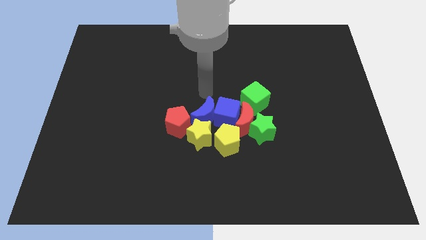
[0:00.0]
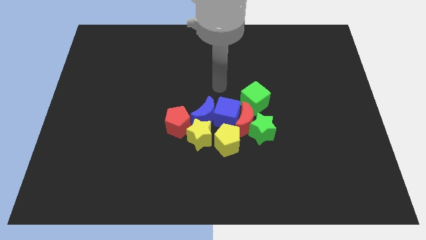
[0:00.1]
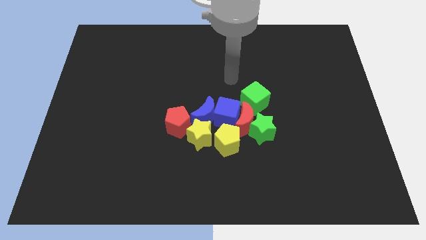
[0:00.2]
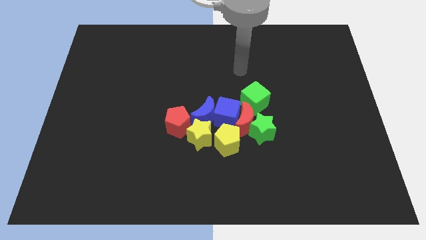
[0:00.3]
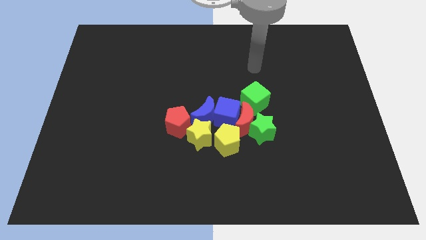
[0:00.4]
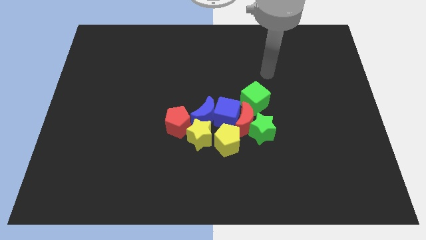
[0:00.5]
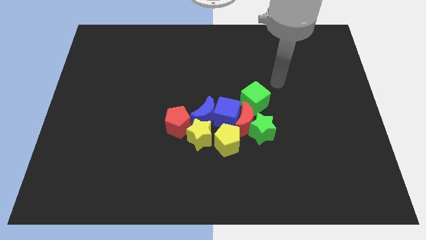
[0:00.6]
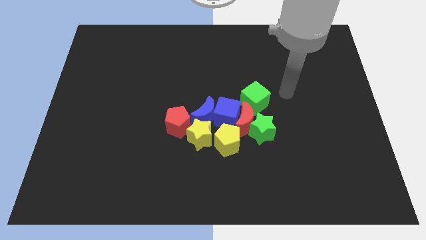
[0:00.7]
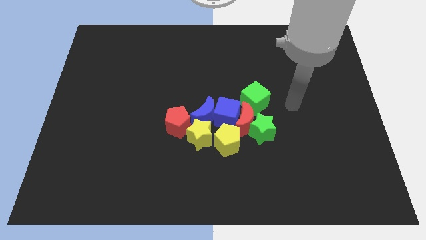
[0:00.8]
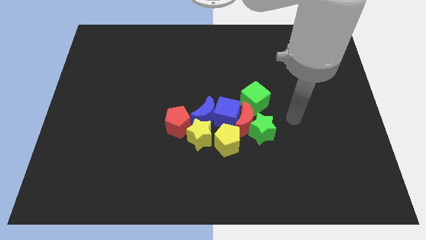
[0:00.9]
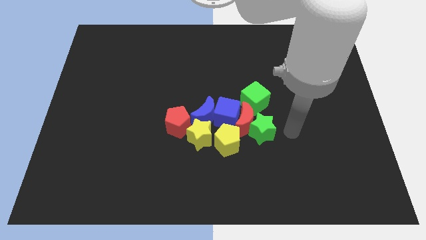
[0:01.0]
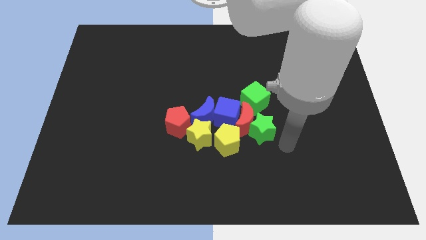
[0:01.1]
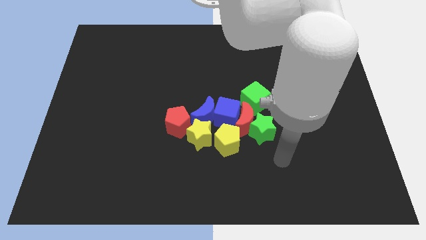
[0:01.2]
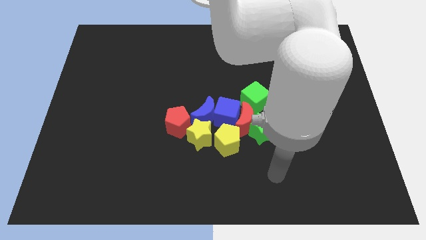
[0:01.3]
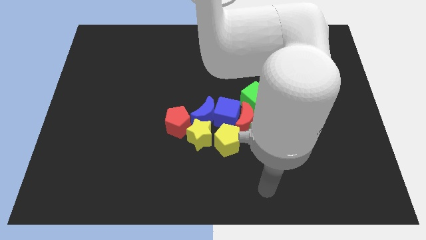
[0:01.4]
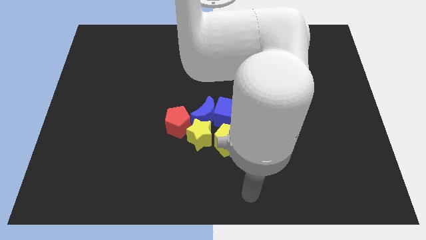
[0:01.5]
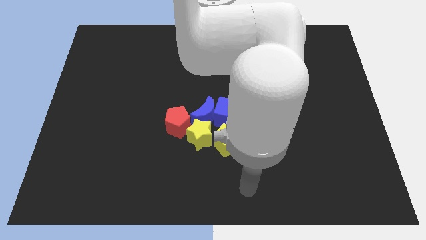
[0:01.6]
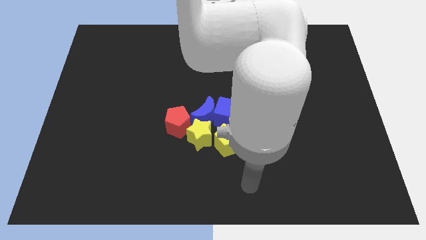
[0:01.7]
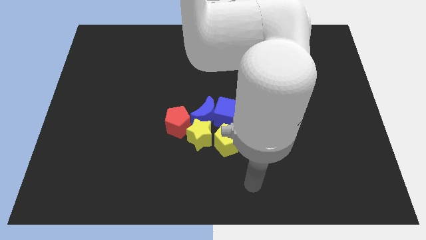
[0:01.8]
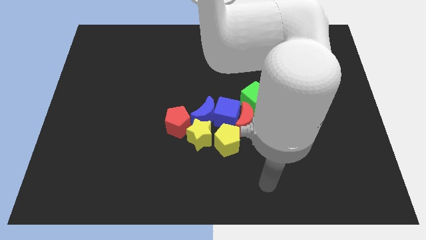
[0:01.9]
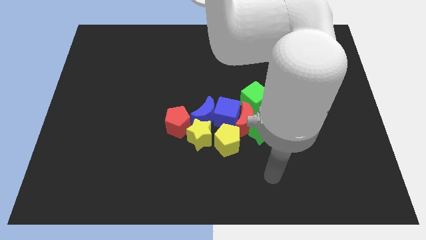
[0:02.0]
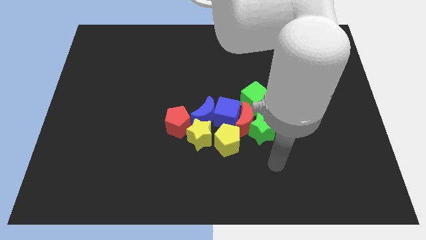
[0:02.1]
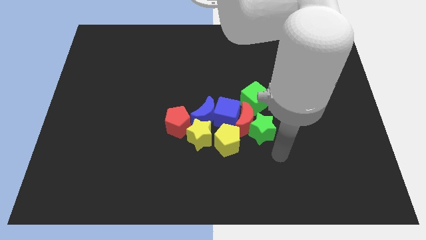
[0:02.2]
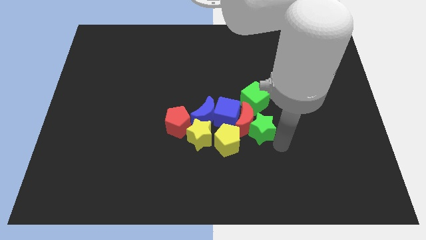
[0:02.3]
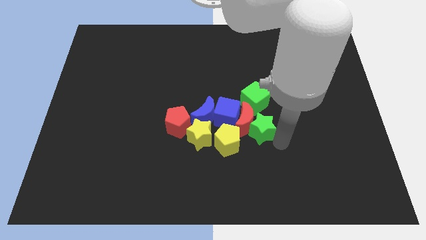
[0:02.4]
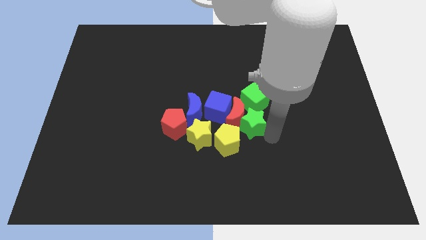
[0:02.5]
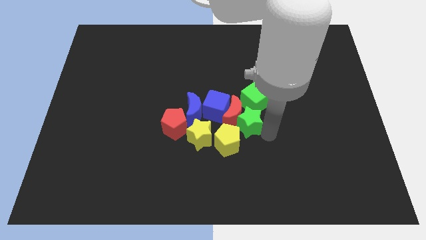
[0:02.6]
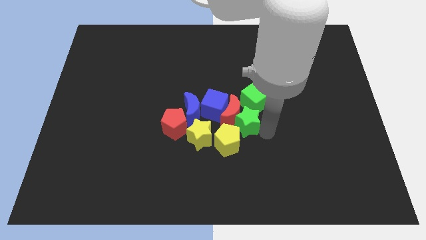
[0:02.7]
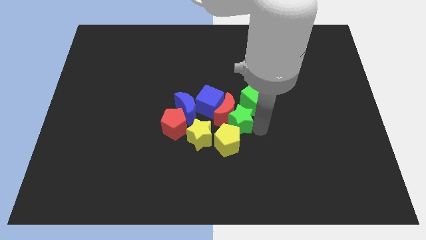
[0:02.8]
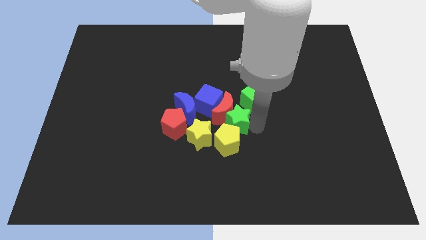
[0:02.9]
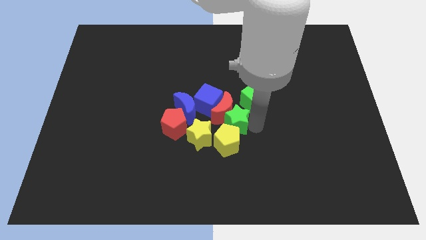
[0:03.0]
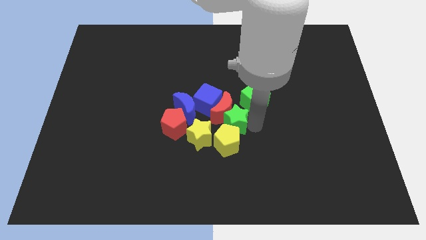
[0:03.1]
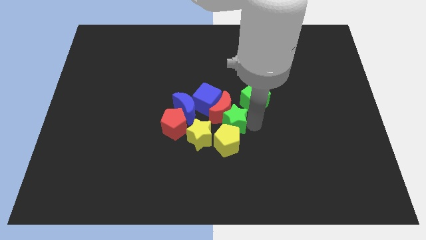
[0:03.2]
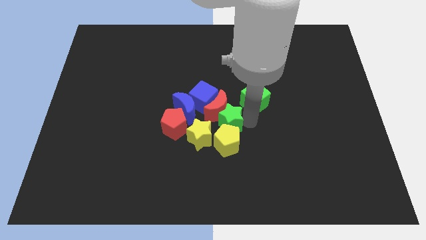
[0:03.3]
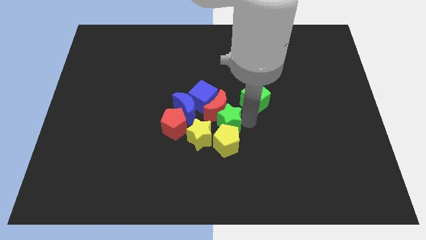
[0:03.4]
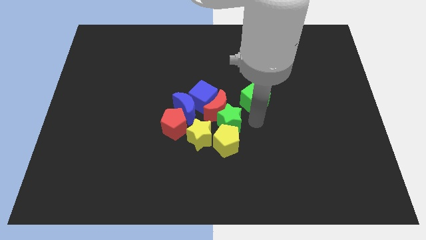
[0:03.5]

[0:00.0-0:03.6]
move the green star to the top of the yellow pentagon

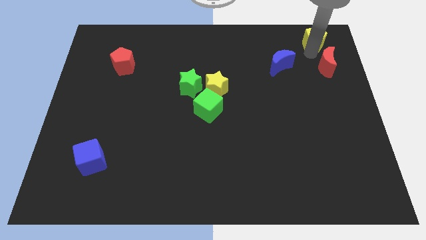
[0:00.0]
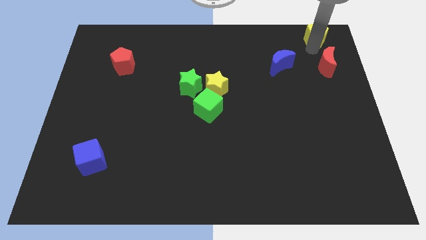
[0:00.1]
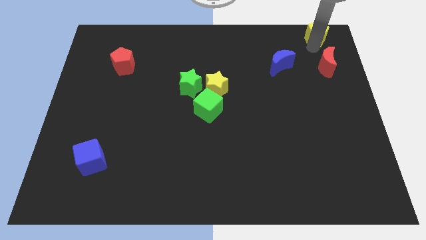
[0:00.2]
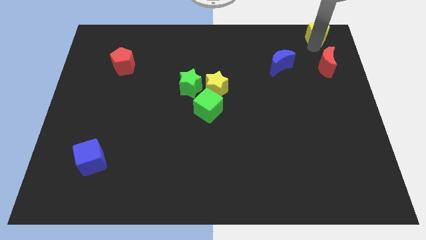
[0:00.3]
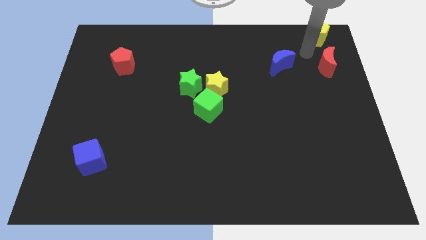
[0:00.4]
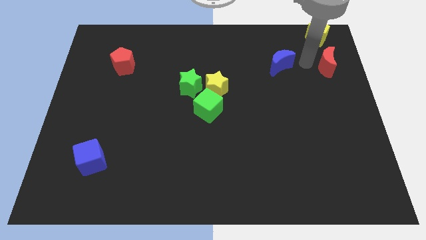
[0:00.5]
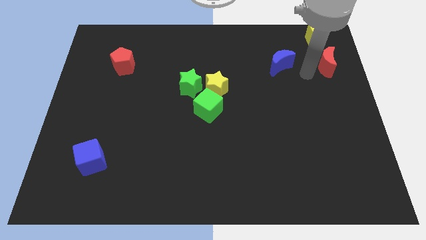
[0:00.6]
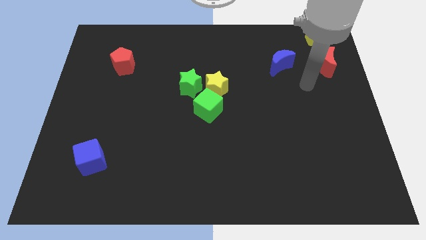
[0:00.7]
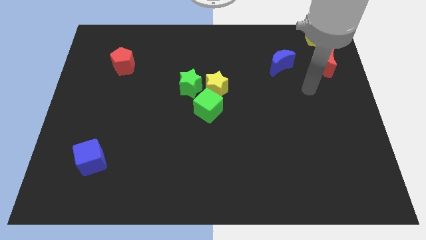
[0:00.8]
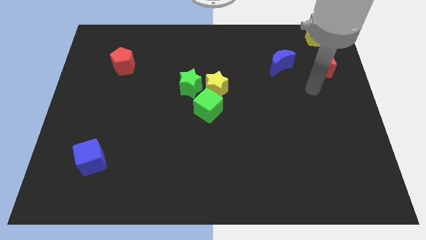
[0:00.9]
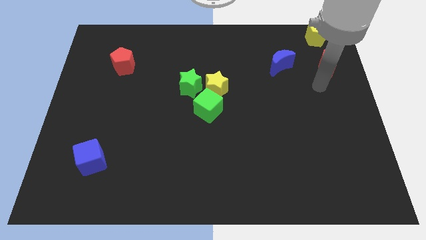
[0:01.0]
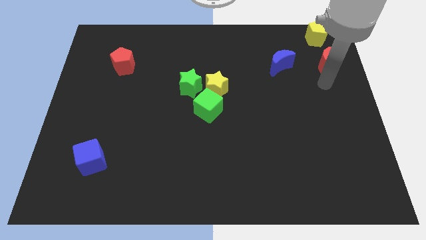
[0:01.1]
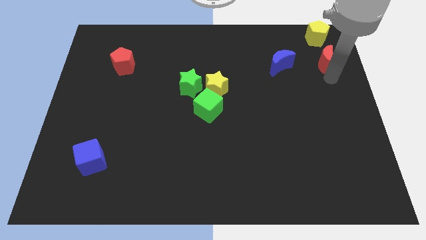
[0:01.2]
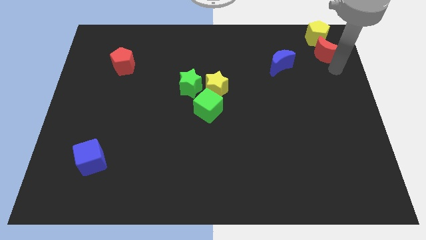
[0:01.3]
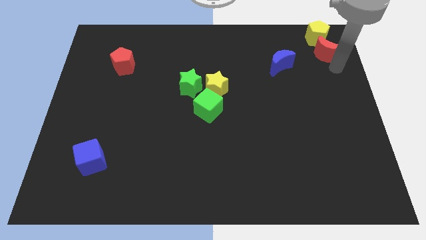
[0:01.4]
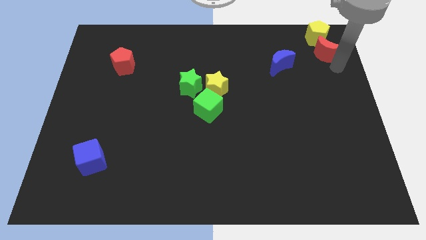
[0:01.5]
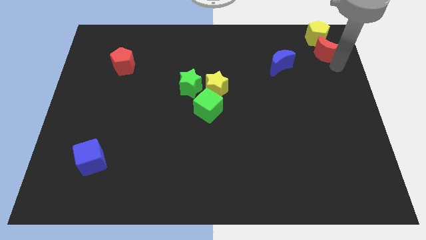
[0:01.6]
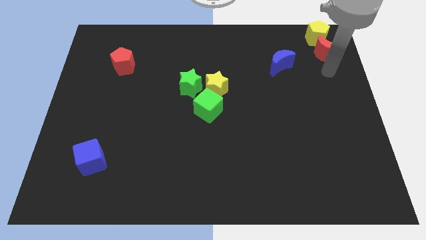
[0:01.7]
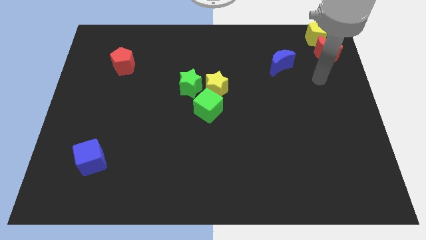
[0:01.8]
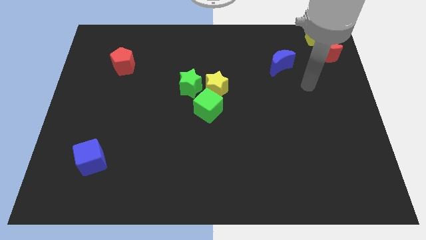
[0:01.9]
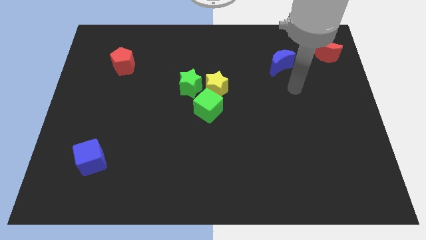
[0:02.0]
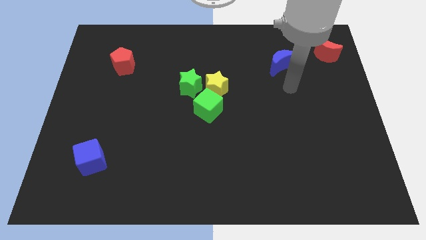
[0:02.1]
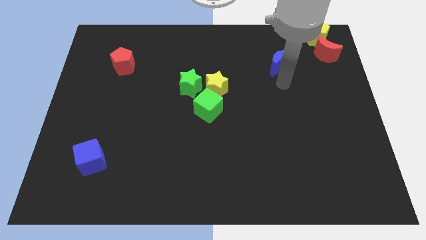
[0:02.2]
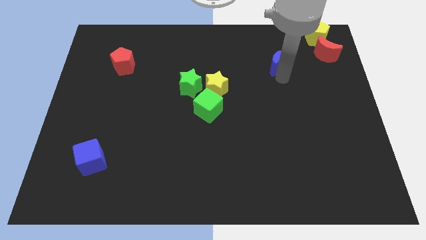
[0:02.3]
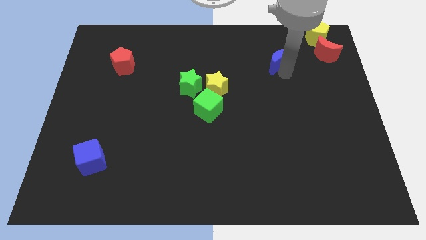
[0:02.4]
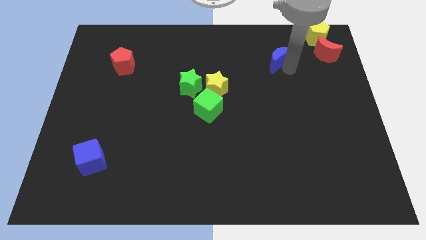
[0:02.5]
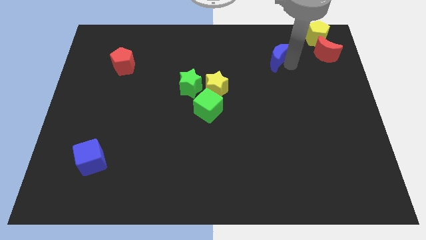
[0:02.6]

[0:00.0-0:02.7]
push the red moon down to the yellow pentagon

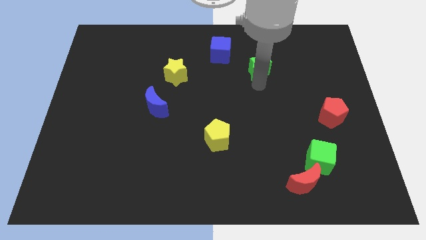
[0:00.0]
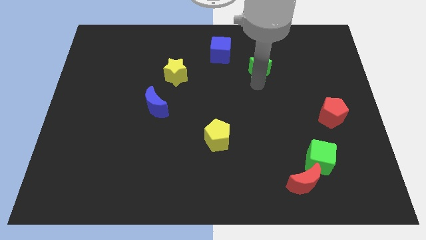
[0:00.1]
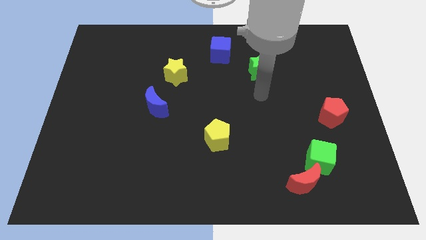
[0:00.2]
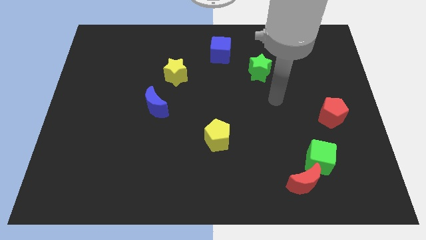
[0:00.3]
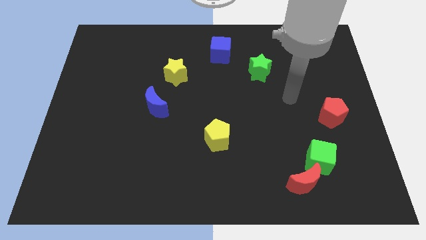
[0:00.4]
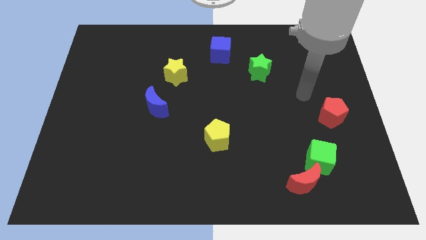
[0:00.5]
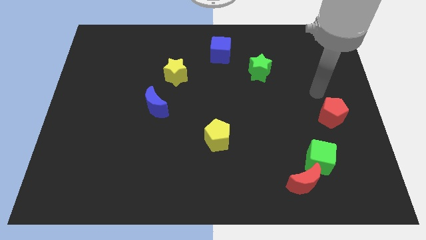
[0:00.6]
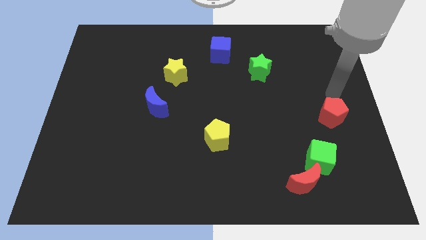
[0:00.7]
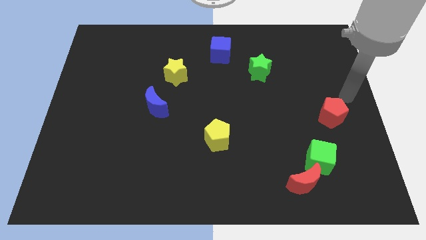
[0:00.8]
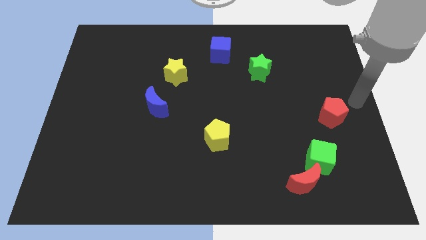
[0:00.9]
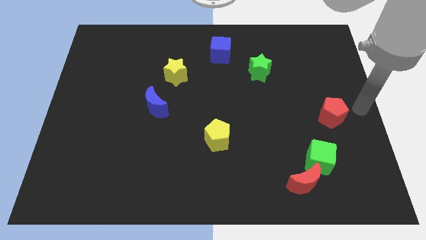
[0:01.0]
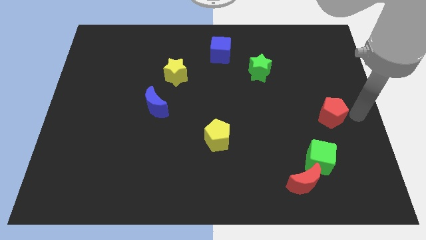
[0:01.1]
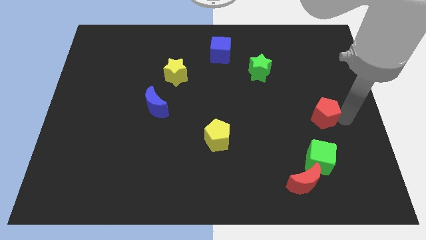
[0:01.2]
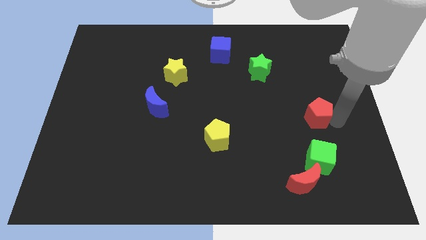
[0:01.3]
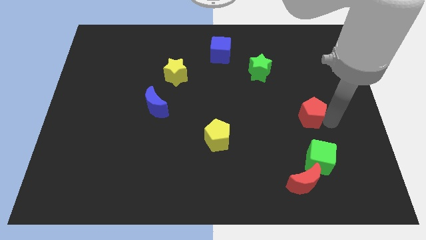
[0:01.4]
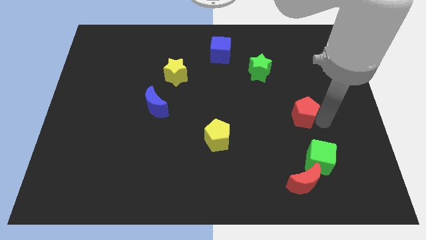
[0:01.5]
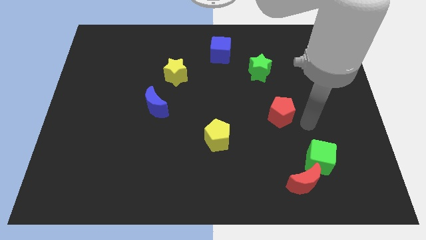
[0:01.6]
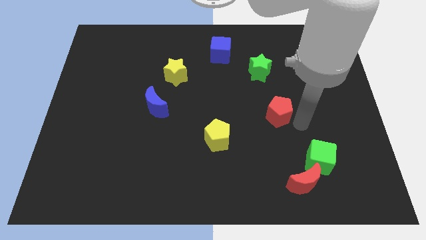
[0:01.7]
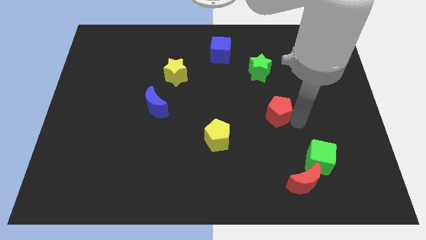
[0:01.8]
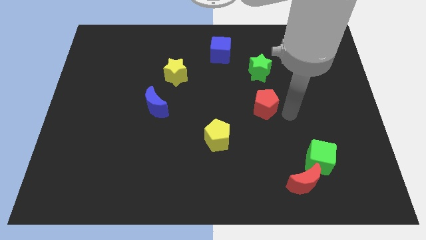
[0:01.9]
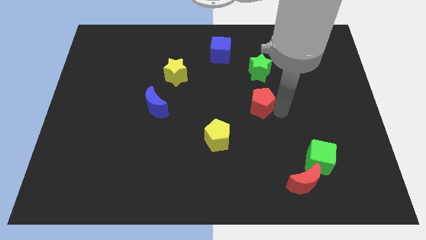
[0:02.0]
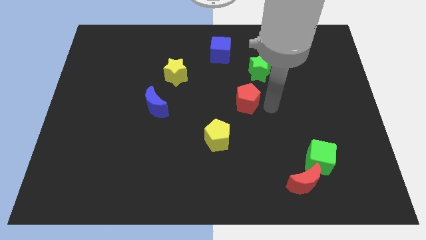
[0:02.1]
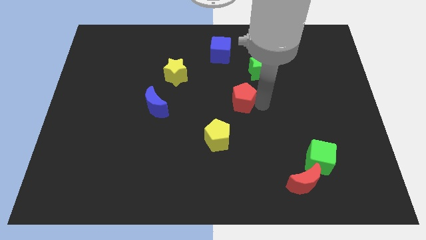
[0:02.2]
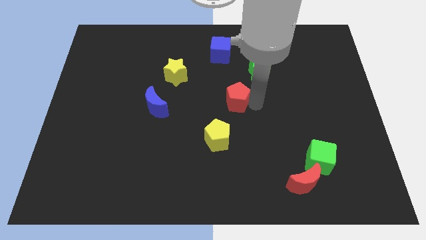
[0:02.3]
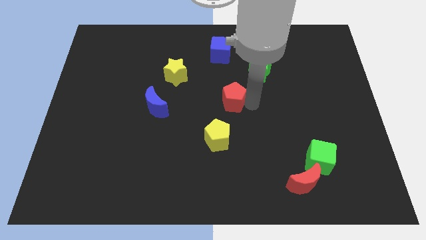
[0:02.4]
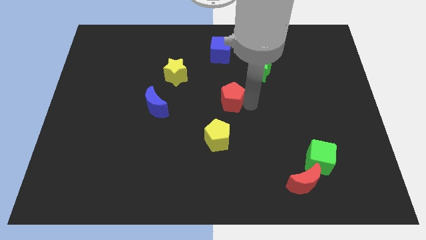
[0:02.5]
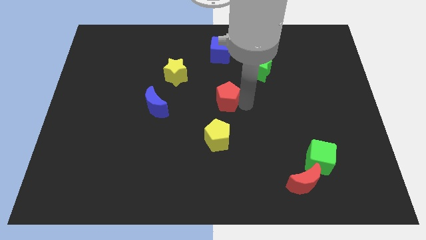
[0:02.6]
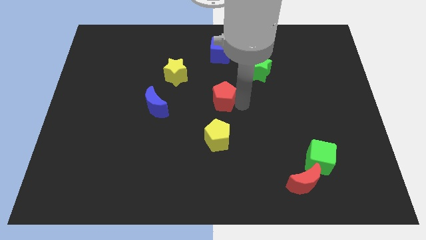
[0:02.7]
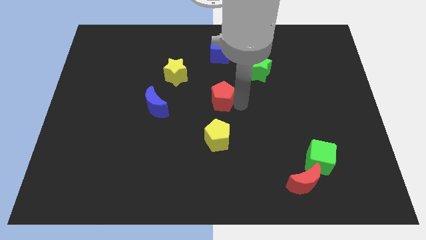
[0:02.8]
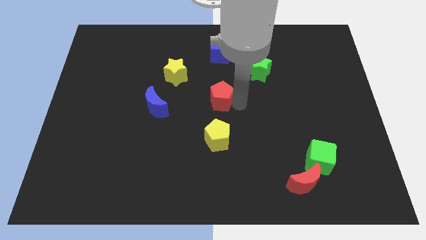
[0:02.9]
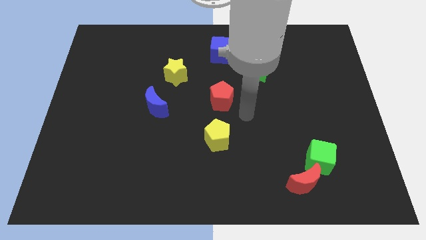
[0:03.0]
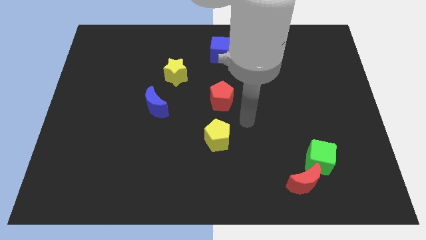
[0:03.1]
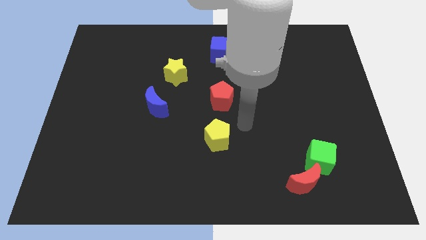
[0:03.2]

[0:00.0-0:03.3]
place the red pentagon below the blue cube
